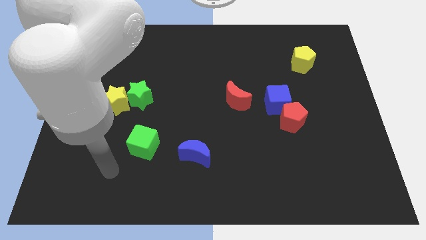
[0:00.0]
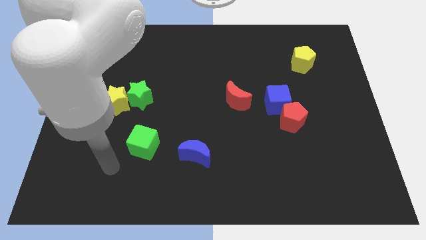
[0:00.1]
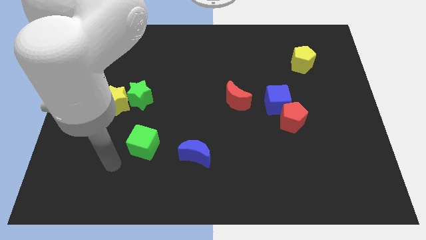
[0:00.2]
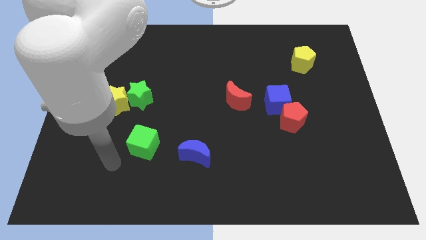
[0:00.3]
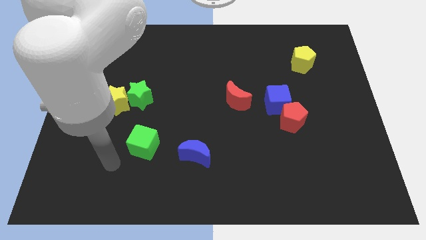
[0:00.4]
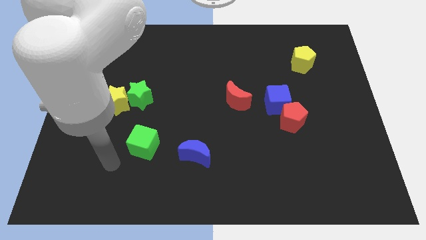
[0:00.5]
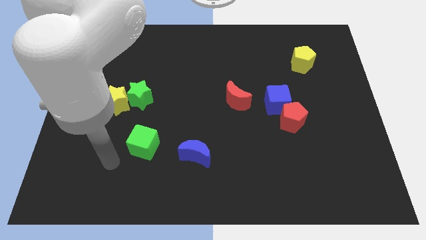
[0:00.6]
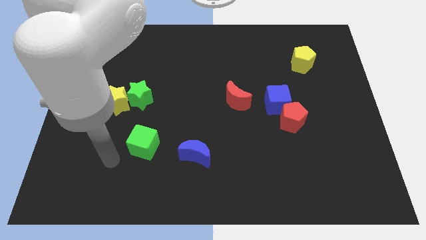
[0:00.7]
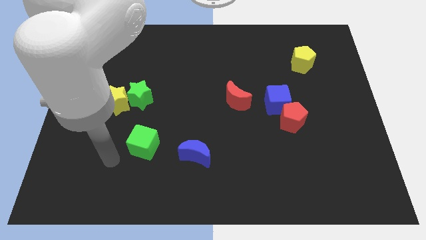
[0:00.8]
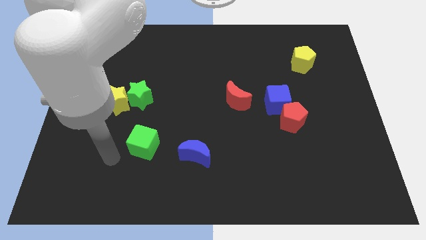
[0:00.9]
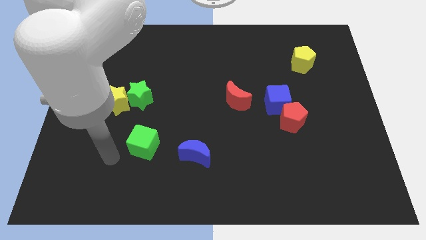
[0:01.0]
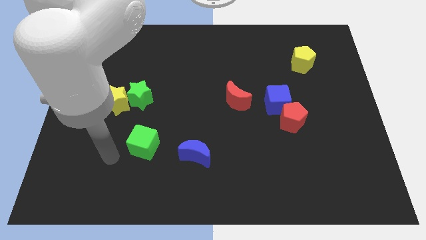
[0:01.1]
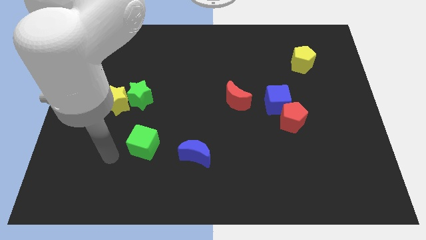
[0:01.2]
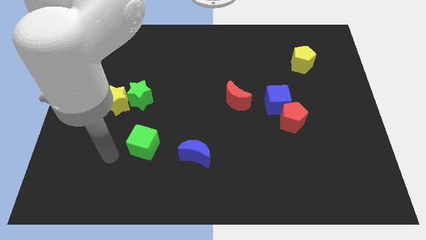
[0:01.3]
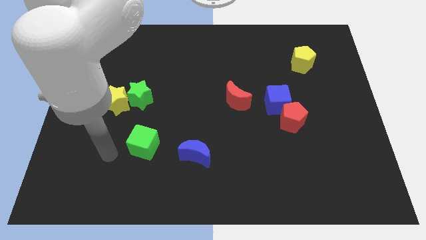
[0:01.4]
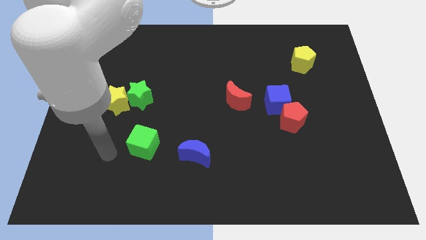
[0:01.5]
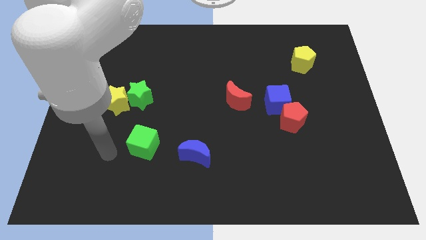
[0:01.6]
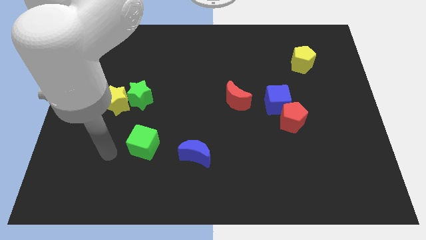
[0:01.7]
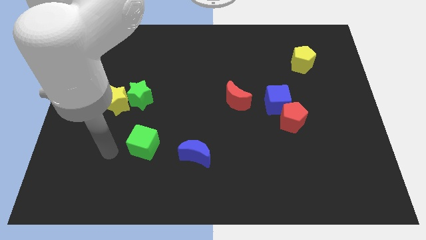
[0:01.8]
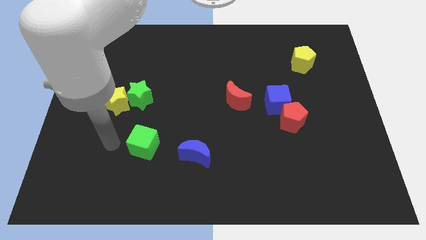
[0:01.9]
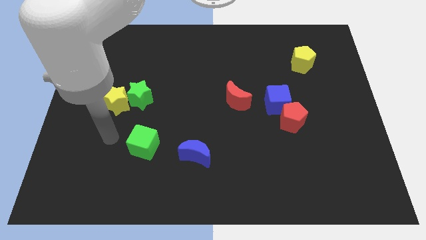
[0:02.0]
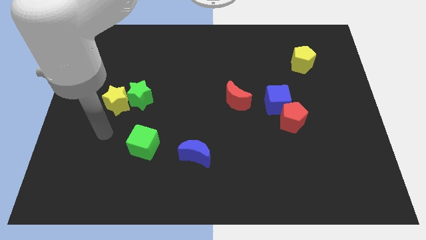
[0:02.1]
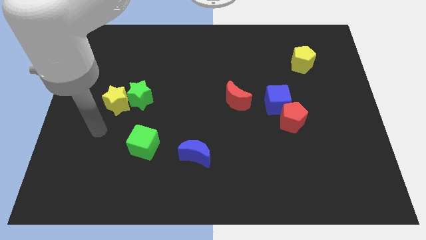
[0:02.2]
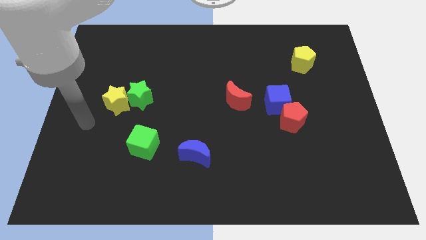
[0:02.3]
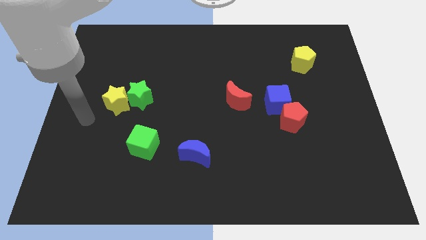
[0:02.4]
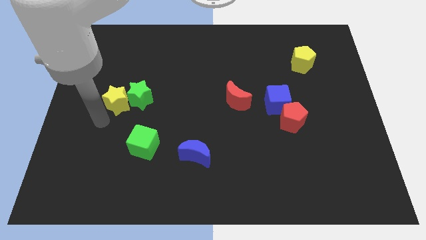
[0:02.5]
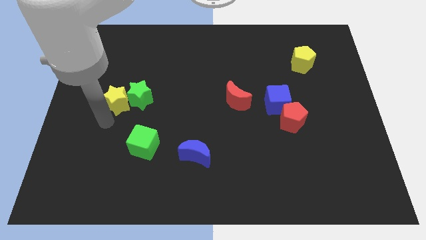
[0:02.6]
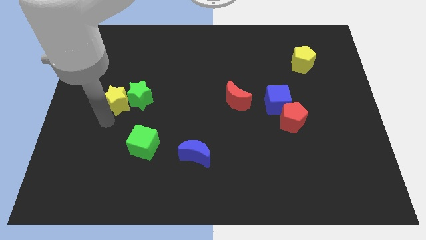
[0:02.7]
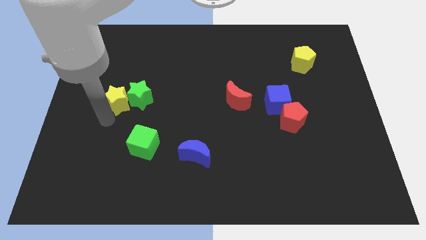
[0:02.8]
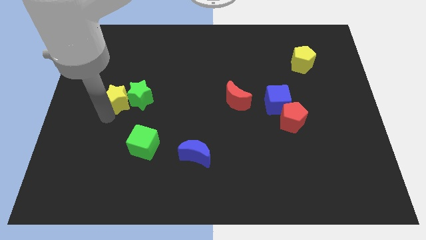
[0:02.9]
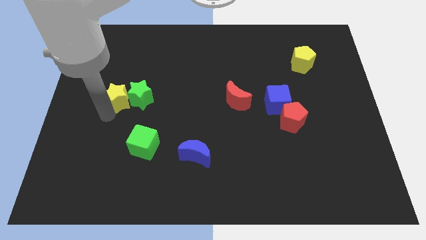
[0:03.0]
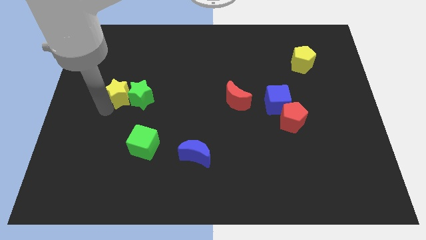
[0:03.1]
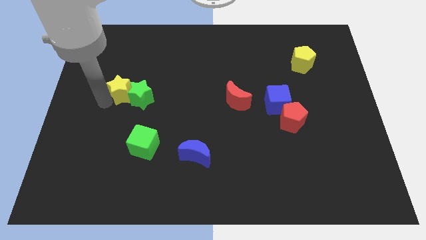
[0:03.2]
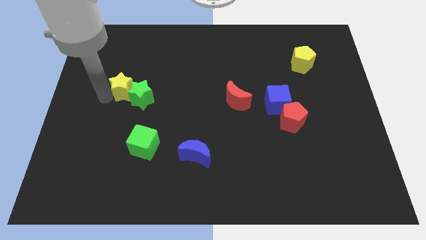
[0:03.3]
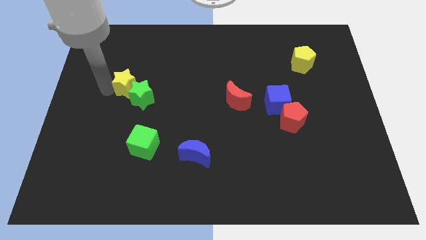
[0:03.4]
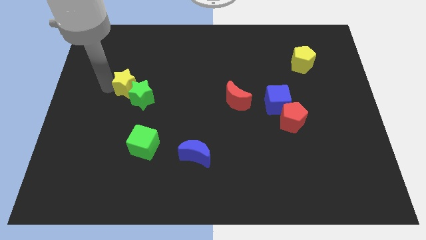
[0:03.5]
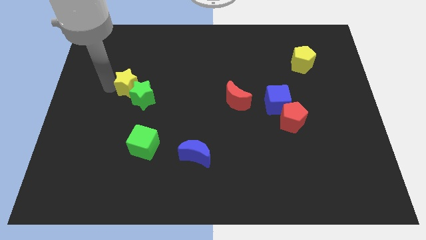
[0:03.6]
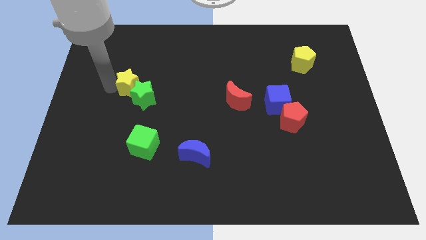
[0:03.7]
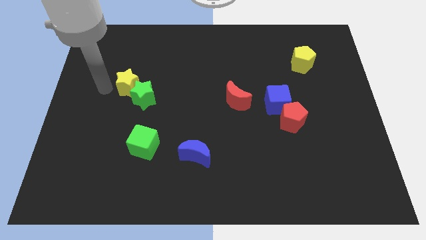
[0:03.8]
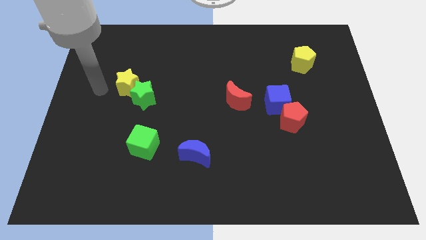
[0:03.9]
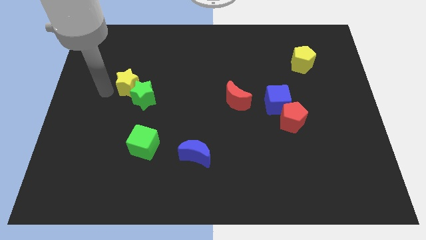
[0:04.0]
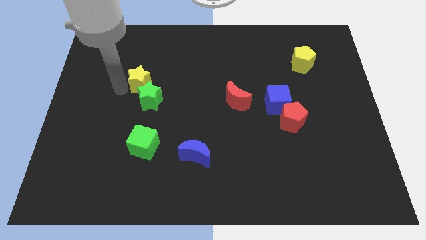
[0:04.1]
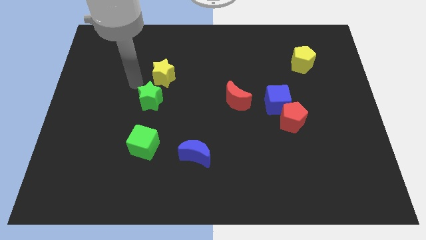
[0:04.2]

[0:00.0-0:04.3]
put the yellow star at the top left side of the green star

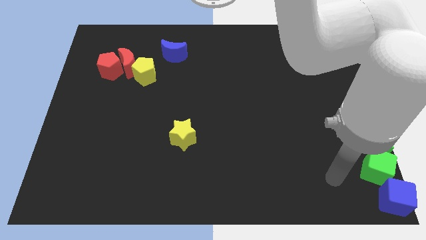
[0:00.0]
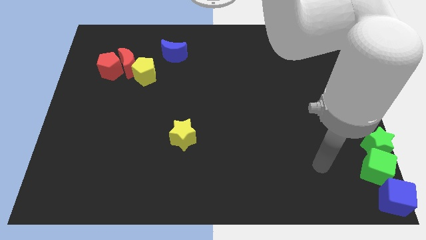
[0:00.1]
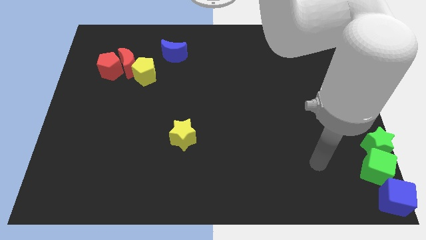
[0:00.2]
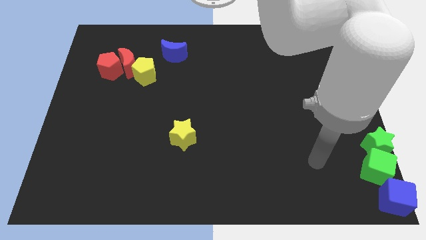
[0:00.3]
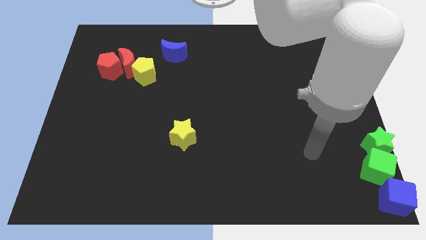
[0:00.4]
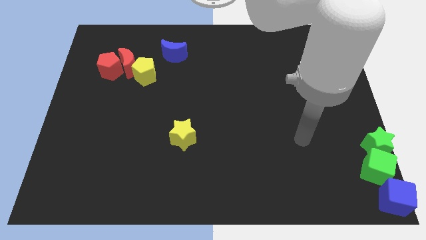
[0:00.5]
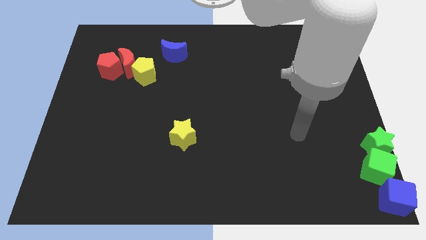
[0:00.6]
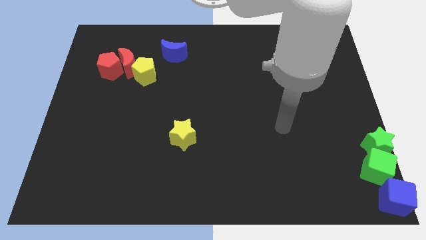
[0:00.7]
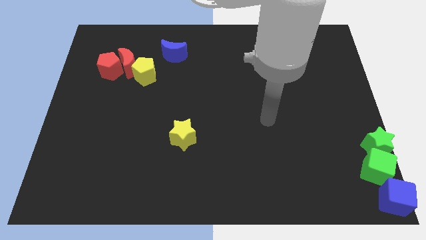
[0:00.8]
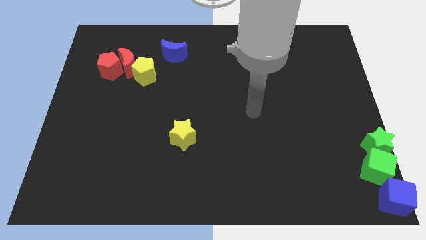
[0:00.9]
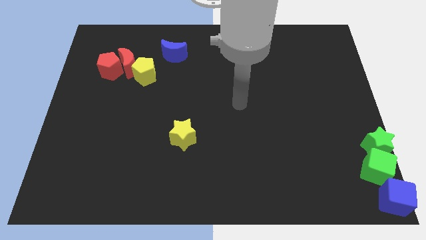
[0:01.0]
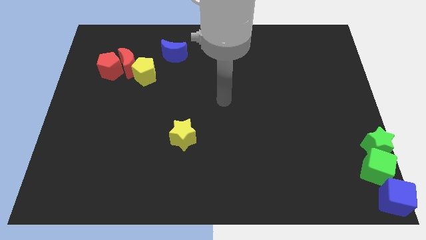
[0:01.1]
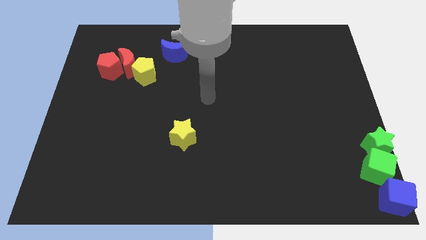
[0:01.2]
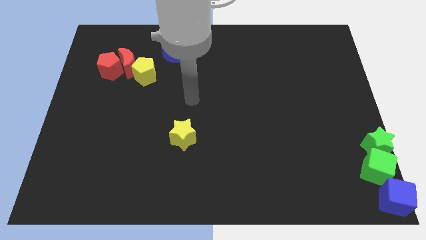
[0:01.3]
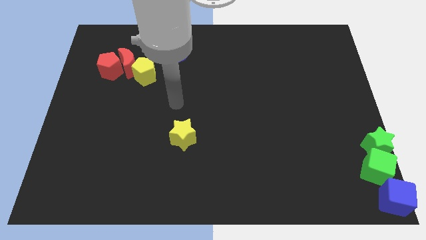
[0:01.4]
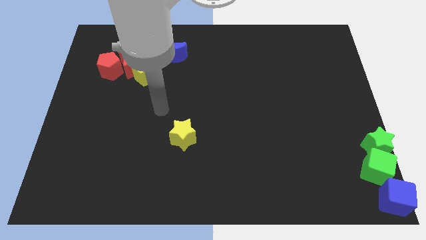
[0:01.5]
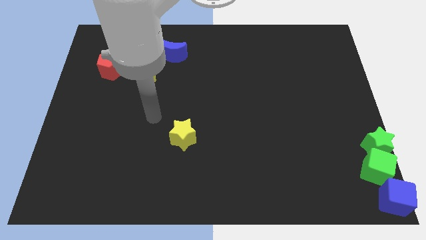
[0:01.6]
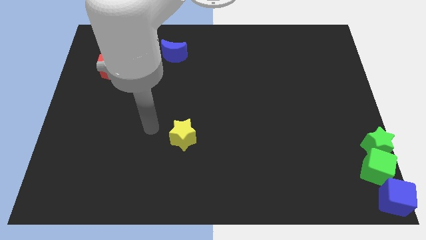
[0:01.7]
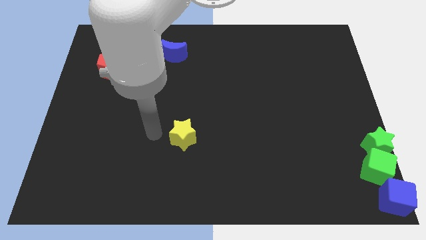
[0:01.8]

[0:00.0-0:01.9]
move your arm on the left side of the yellow star

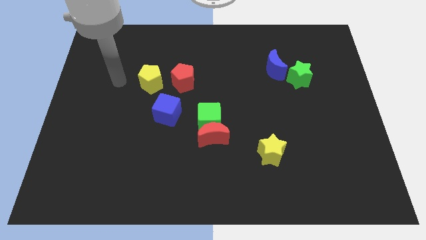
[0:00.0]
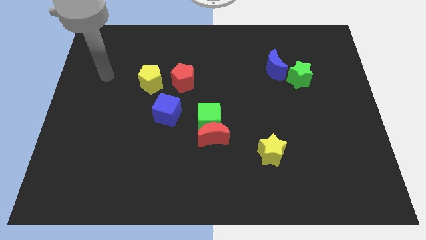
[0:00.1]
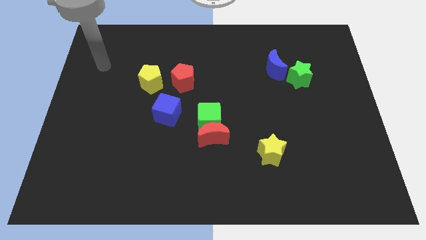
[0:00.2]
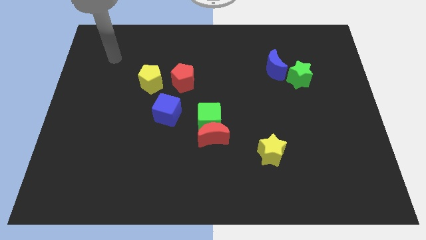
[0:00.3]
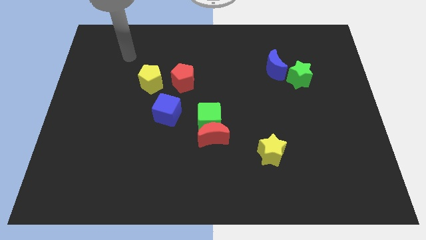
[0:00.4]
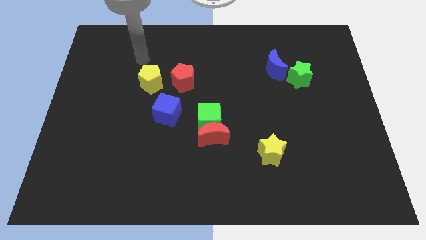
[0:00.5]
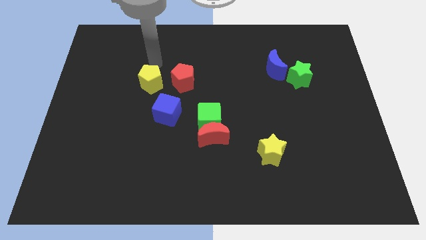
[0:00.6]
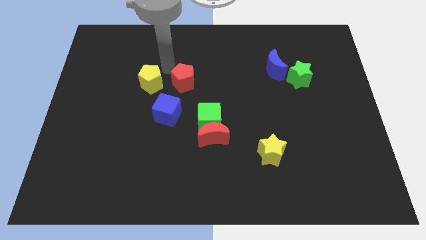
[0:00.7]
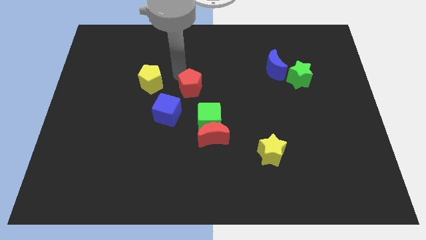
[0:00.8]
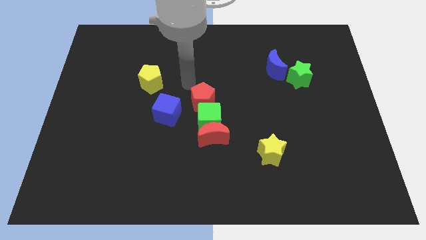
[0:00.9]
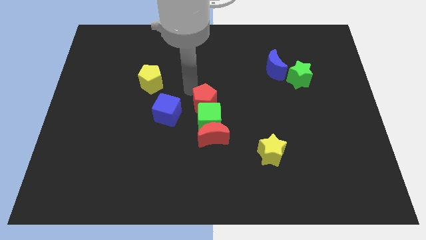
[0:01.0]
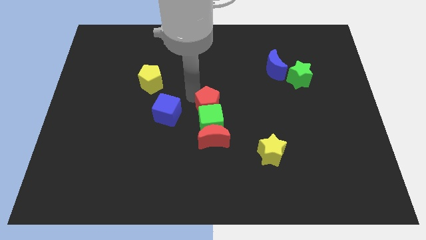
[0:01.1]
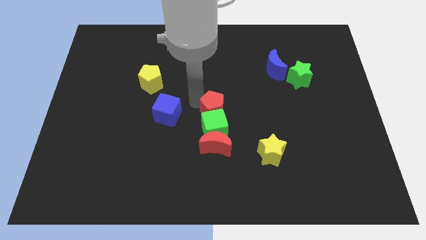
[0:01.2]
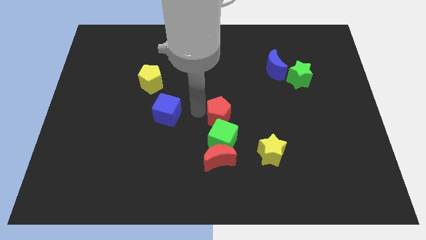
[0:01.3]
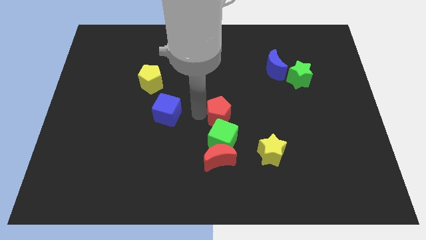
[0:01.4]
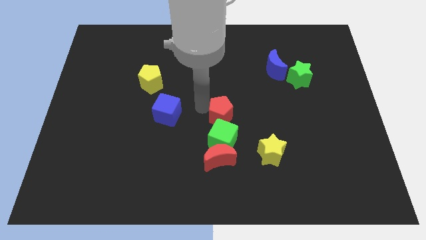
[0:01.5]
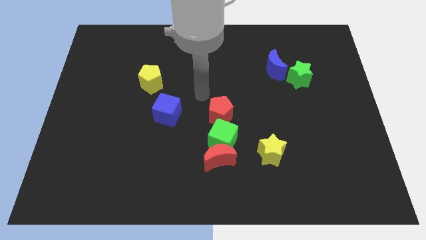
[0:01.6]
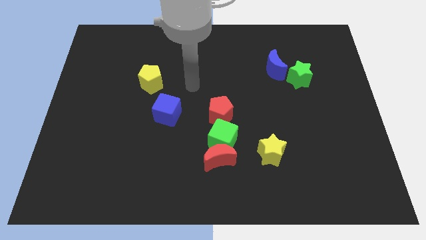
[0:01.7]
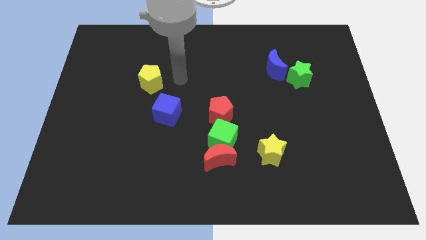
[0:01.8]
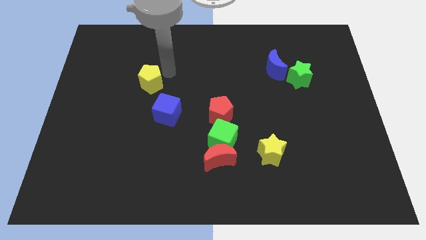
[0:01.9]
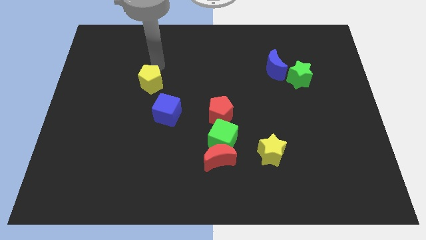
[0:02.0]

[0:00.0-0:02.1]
push red pentagon into green cube

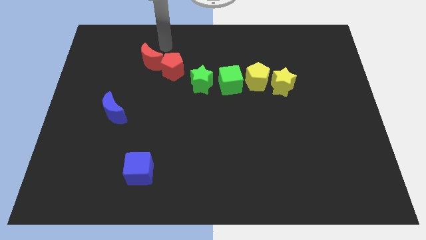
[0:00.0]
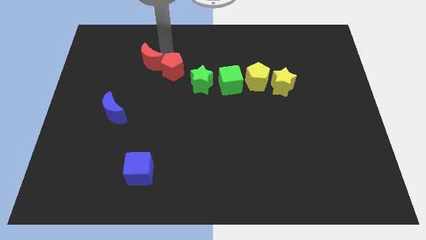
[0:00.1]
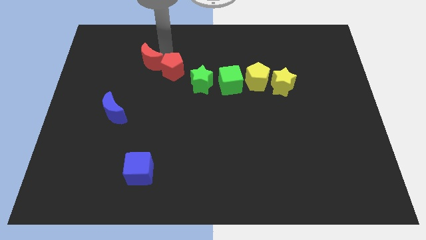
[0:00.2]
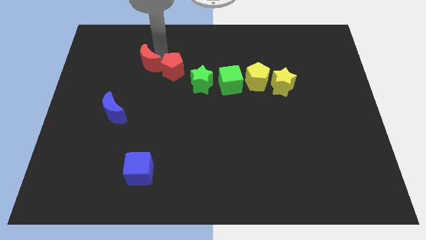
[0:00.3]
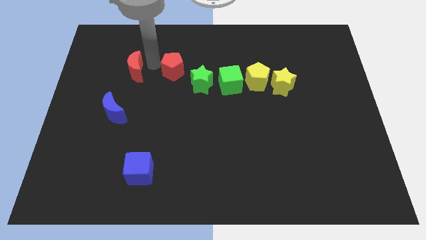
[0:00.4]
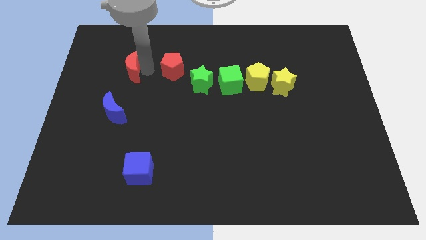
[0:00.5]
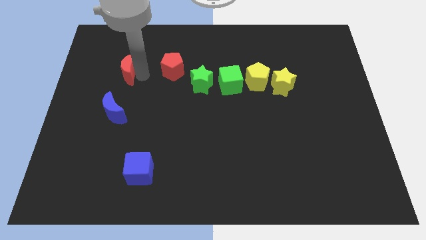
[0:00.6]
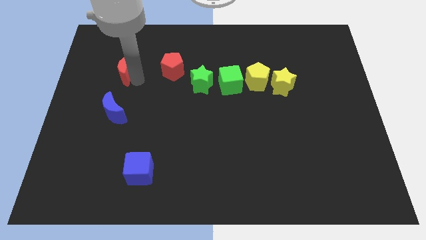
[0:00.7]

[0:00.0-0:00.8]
separate red moon from red pentagon
